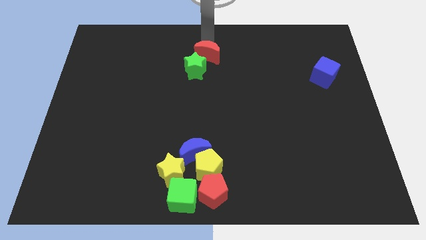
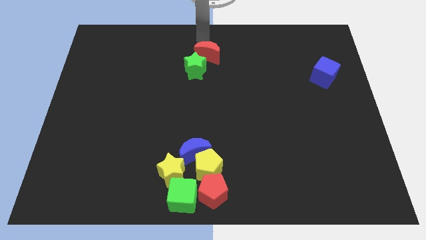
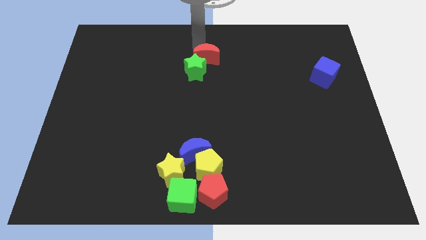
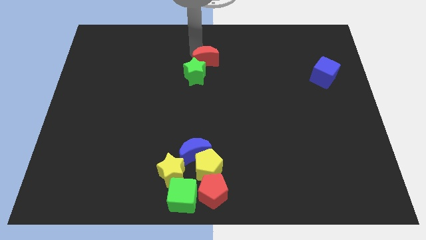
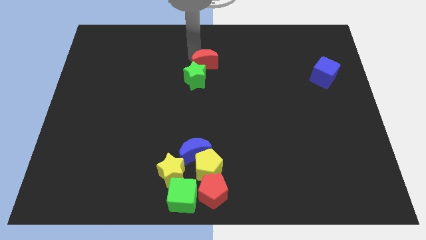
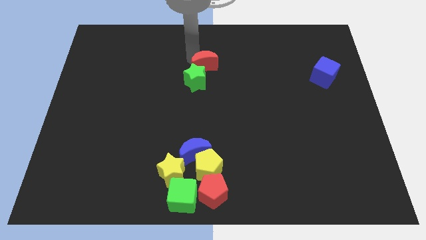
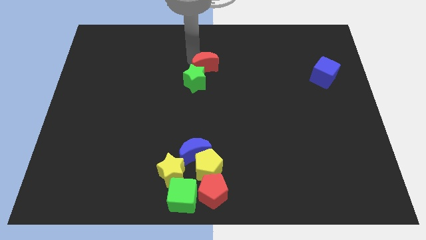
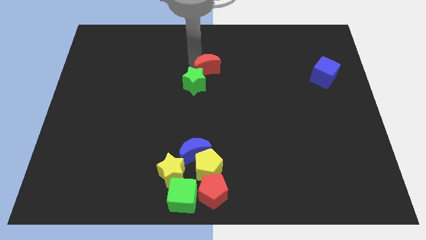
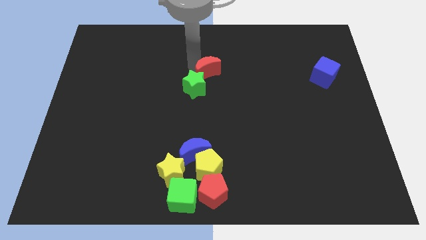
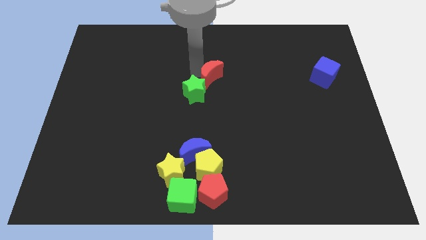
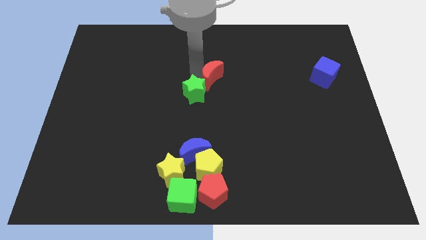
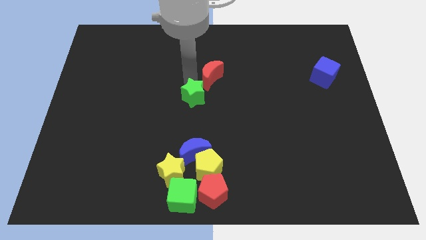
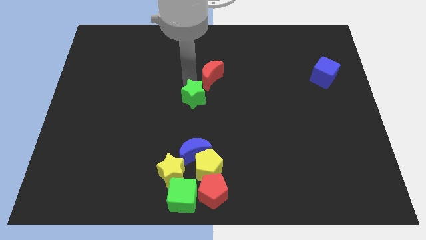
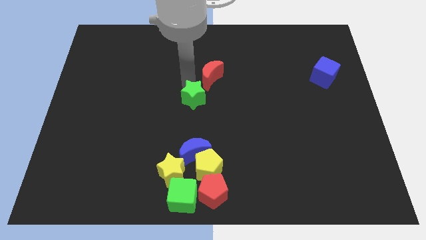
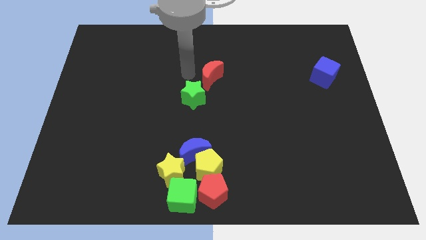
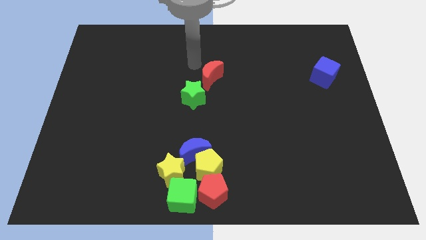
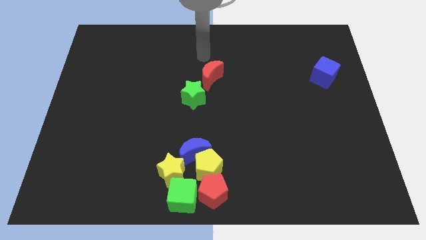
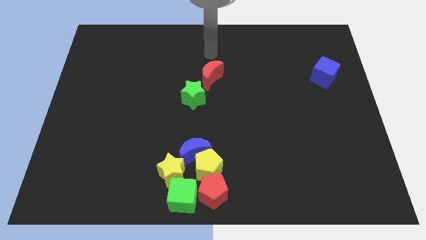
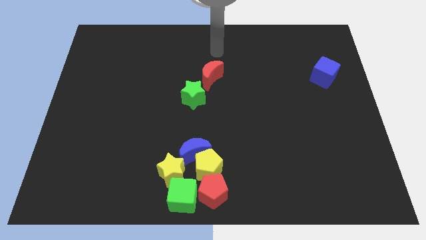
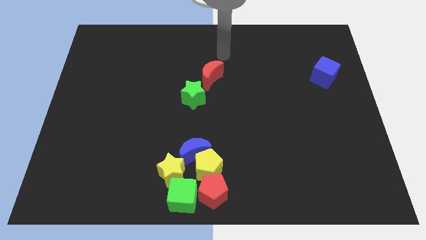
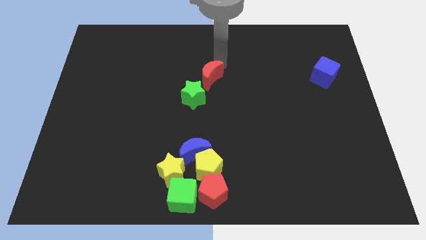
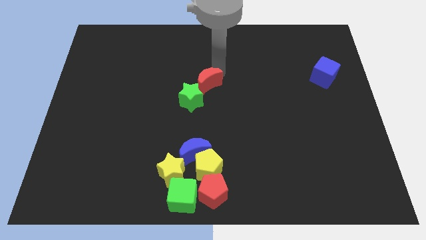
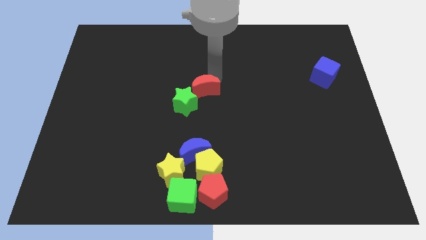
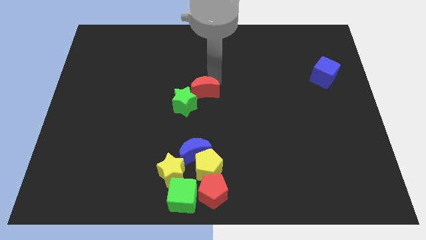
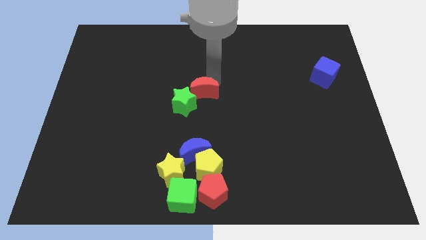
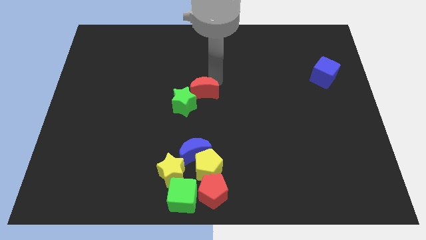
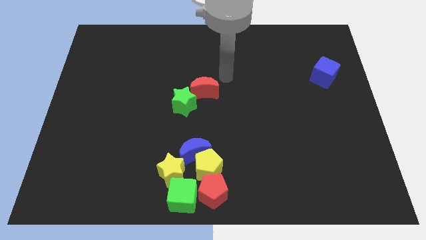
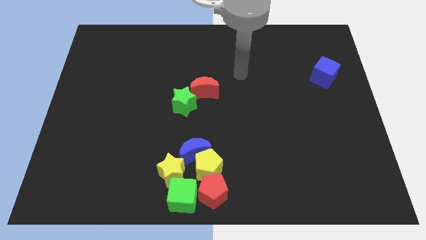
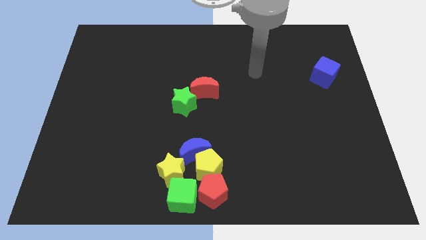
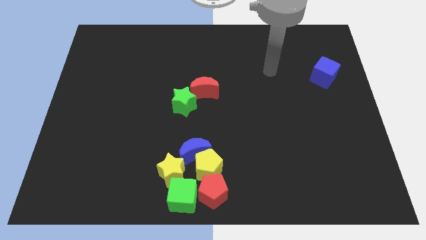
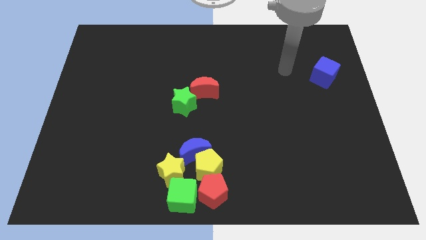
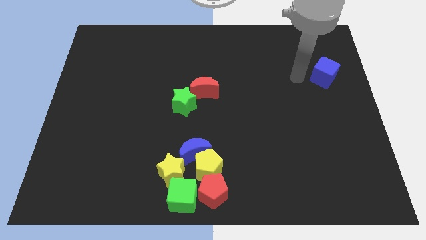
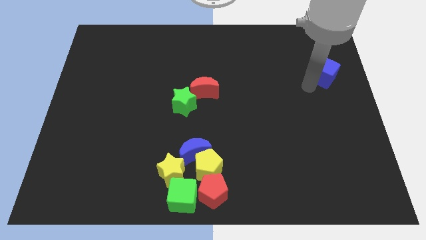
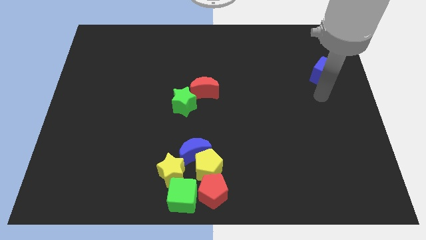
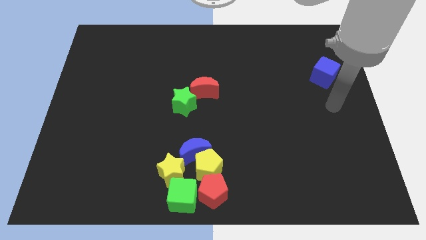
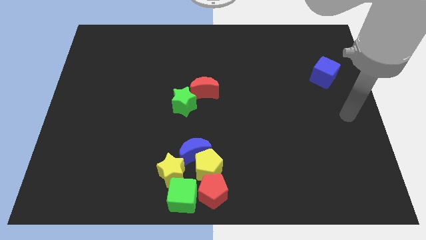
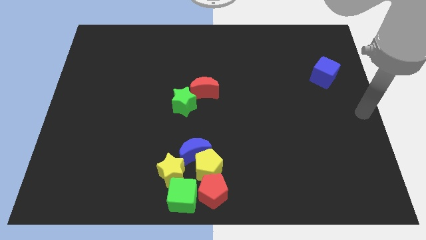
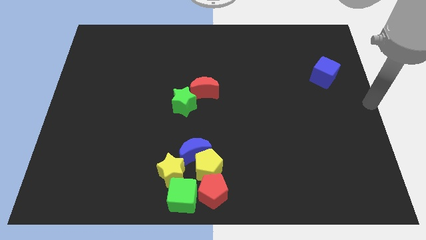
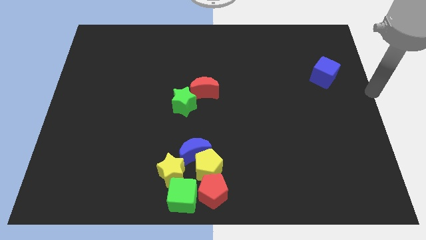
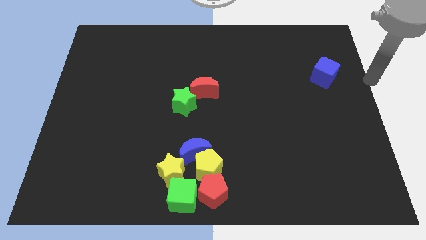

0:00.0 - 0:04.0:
push the red crescent and the green star to the bottom of the board

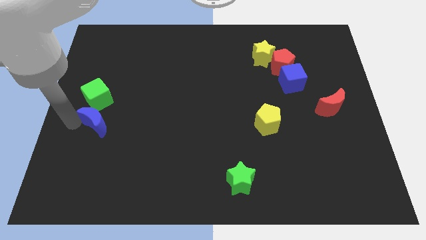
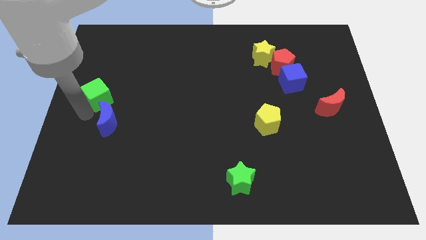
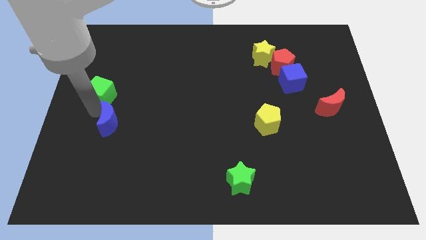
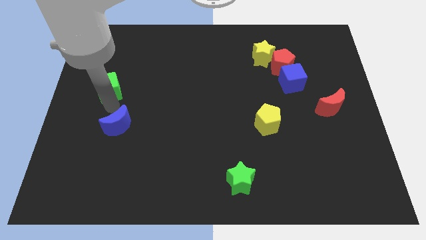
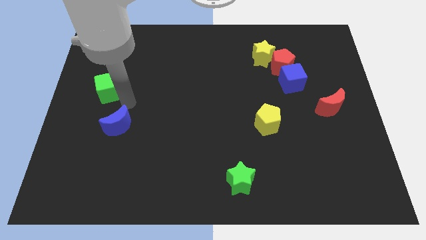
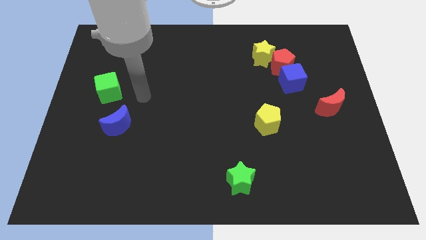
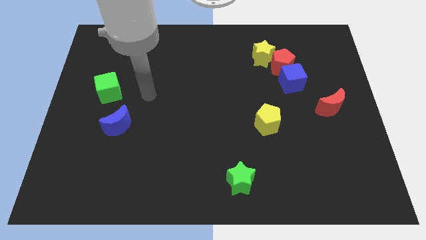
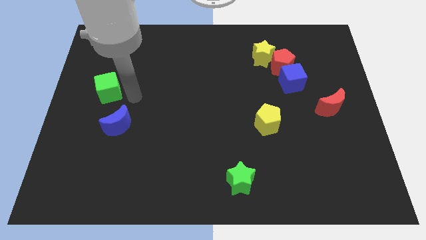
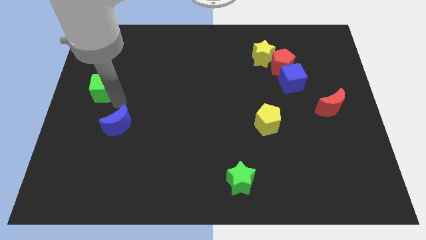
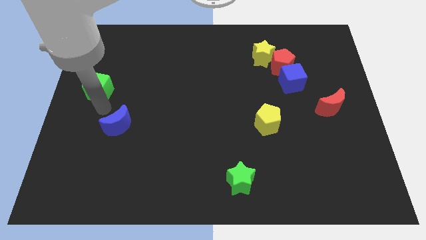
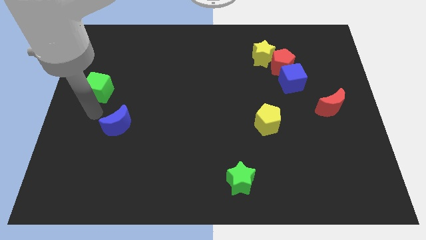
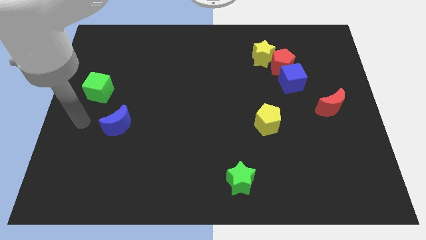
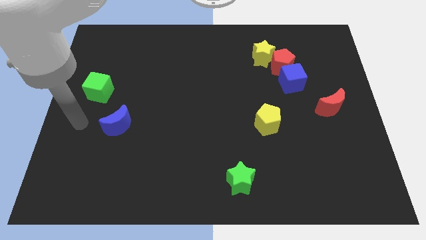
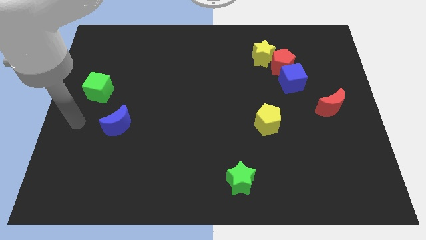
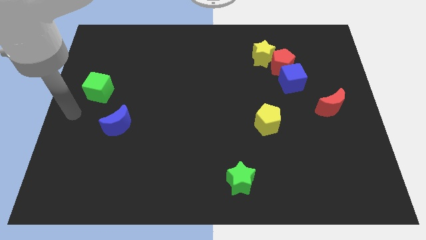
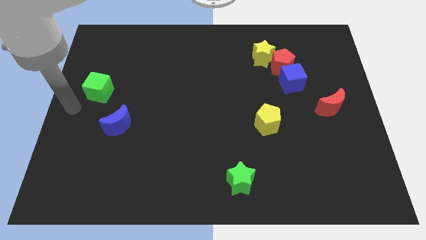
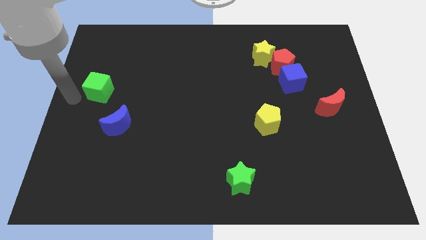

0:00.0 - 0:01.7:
separate the green cube and blue semicircle

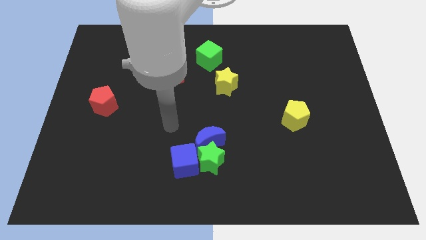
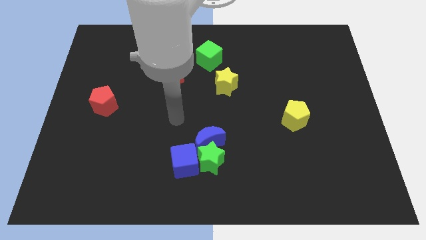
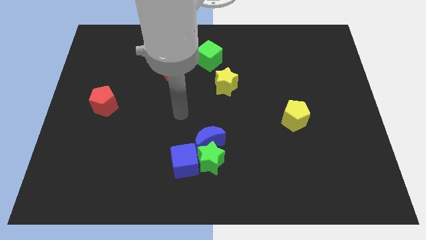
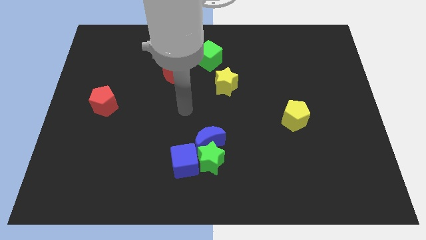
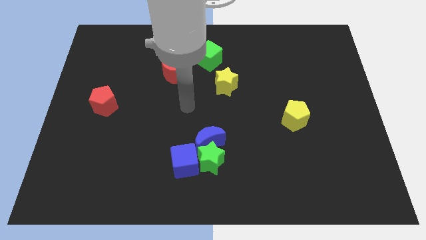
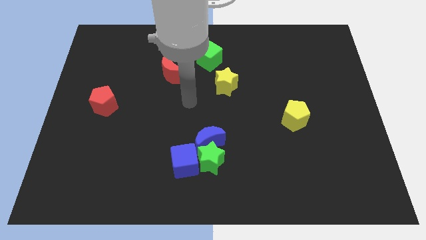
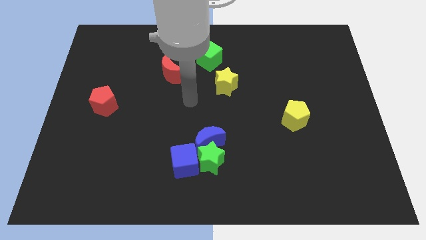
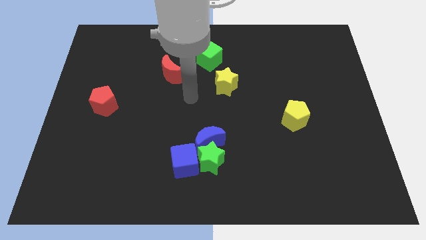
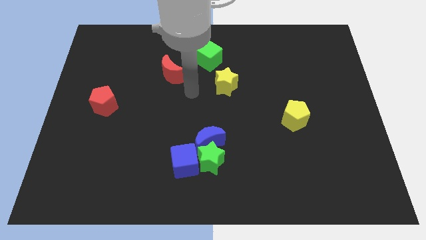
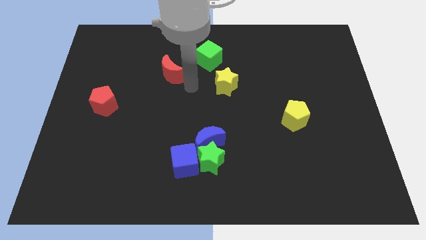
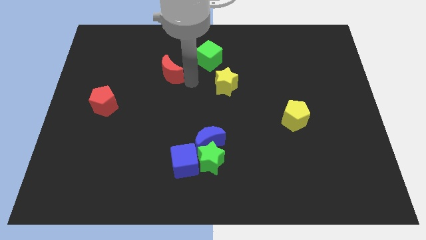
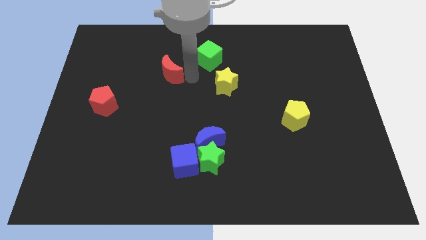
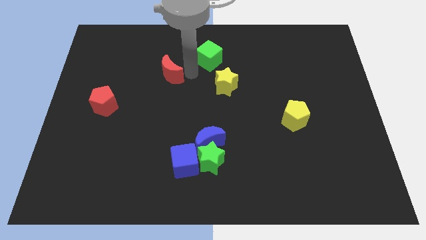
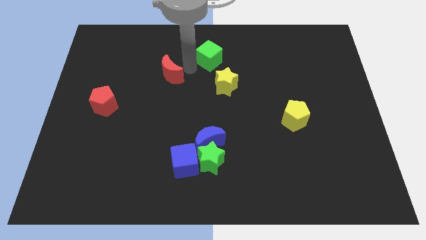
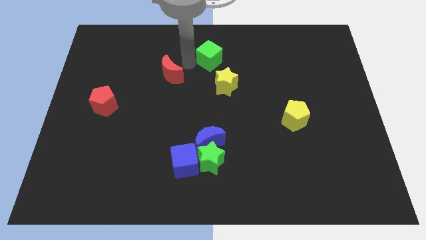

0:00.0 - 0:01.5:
move your arm in between the red crescent and the green cube

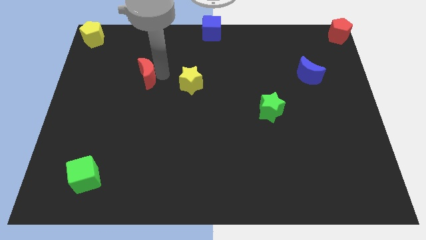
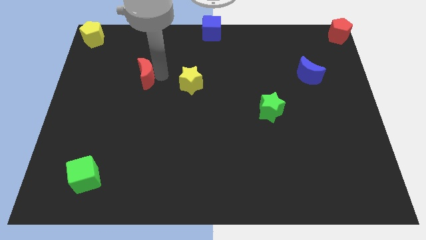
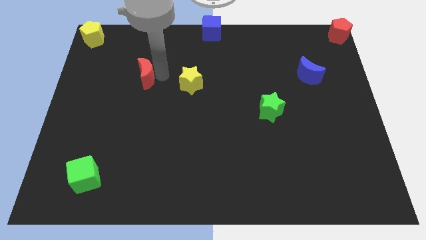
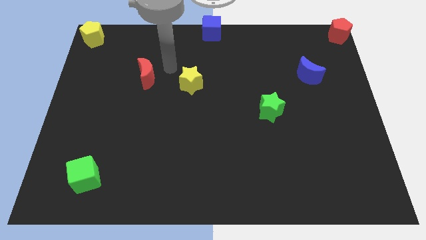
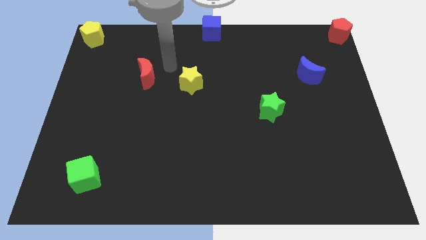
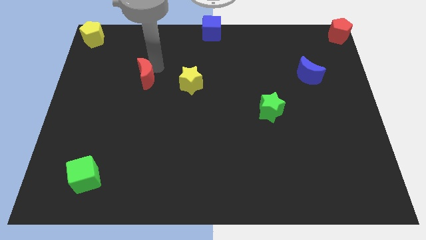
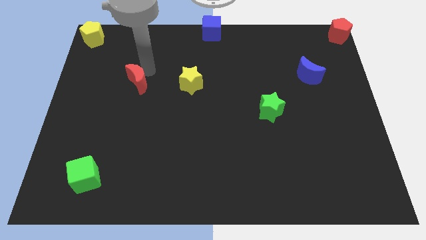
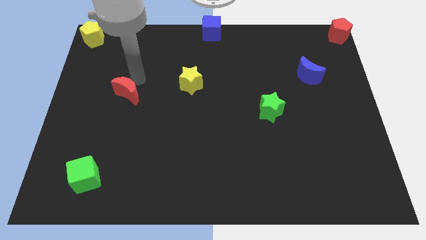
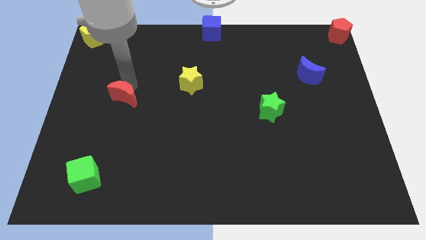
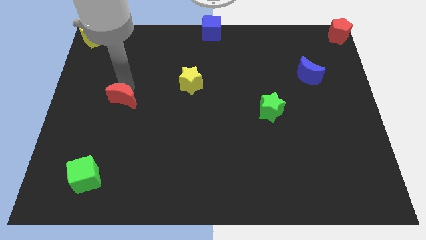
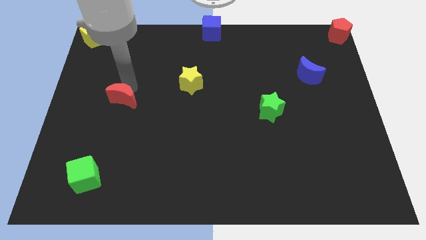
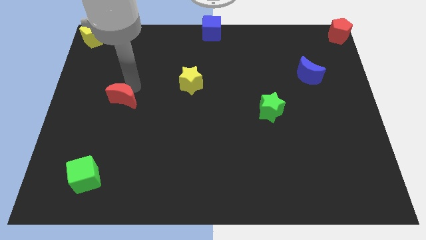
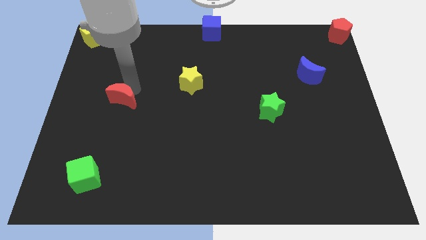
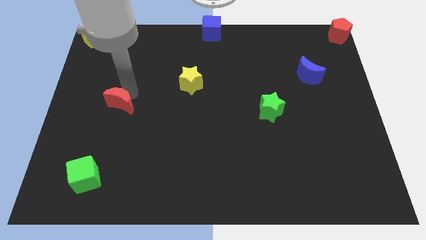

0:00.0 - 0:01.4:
move red moon slightly down

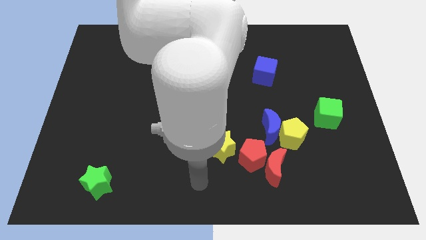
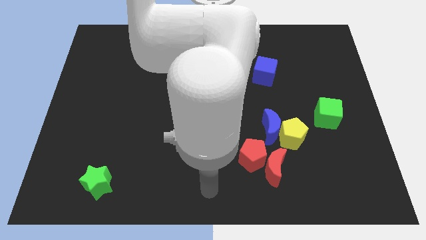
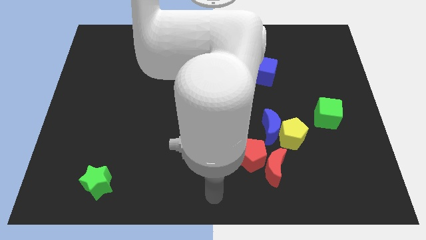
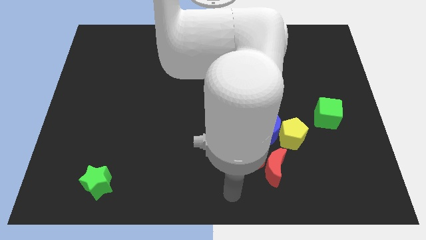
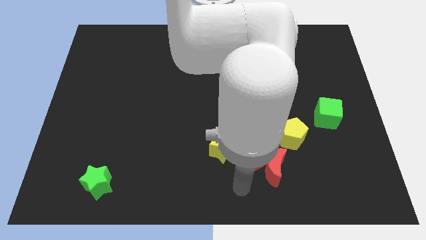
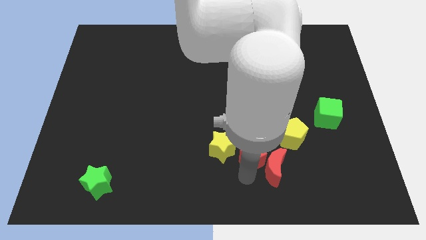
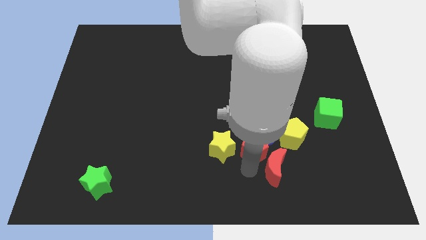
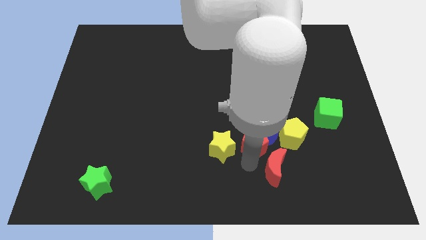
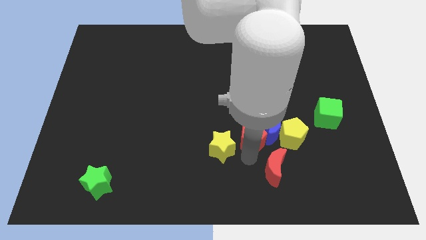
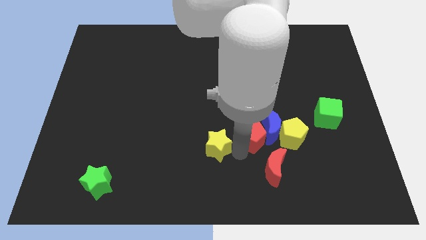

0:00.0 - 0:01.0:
push the red pentagon slightly to the top
